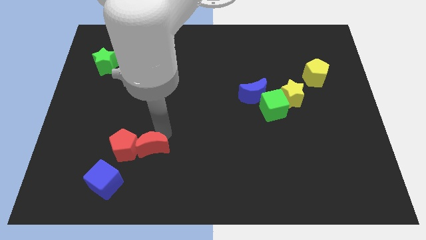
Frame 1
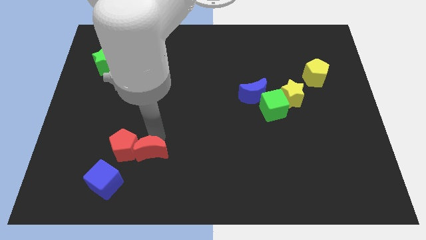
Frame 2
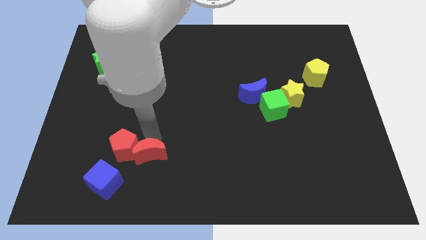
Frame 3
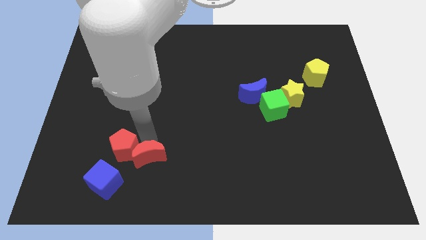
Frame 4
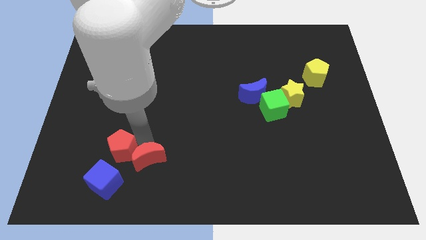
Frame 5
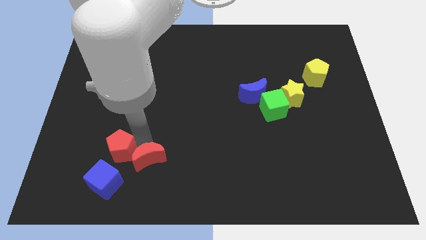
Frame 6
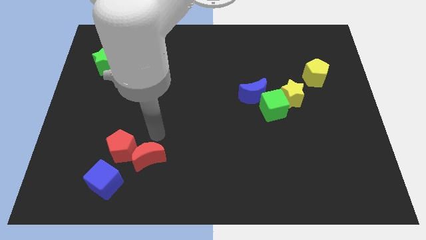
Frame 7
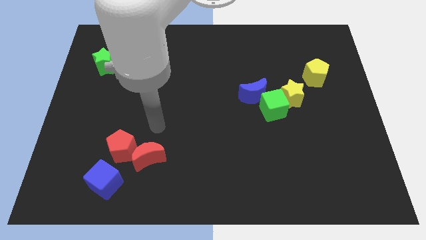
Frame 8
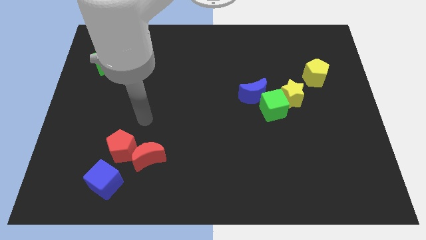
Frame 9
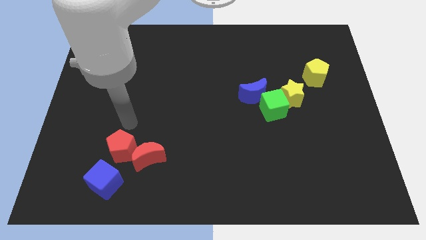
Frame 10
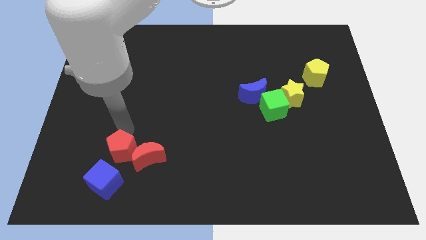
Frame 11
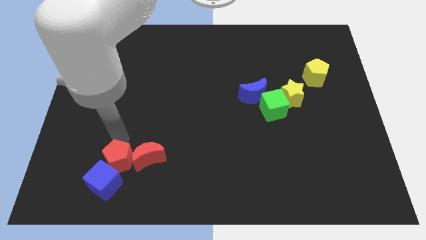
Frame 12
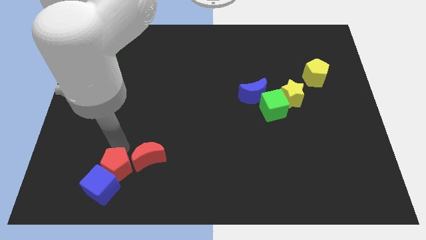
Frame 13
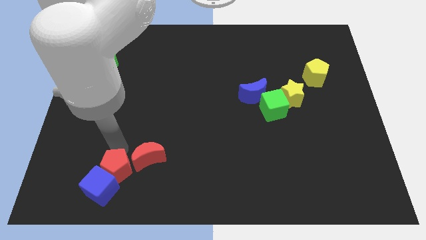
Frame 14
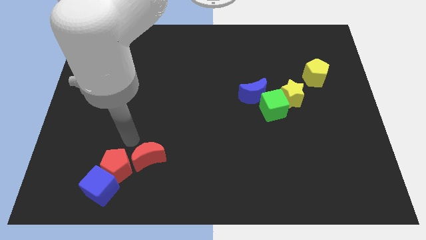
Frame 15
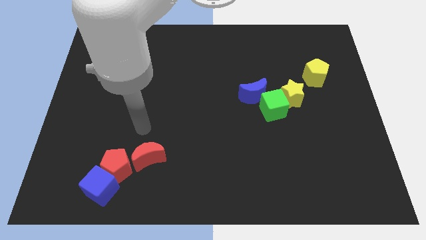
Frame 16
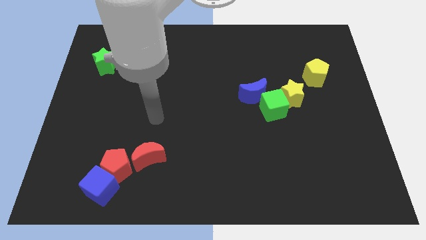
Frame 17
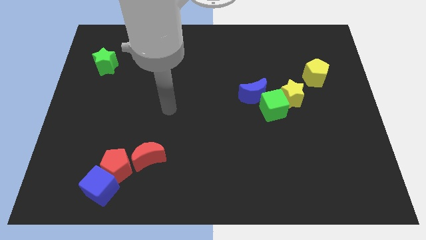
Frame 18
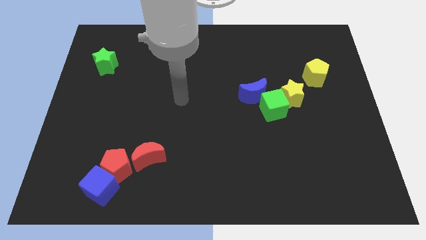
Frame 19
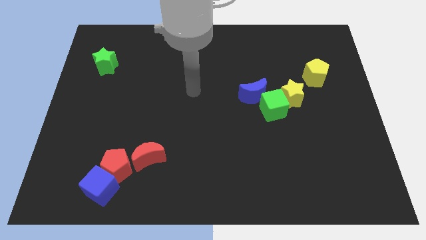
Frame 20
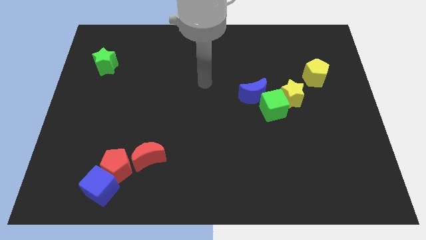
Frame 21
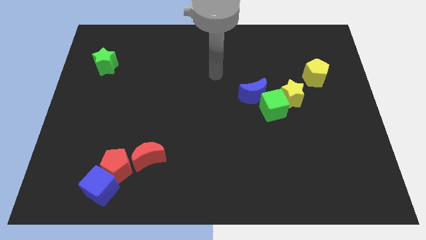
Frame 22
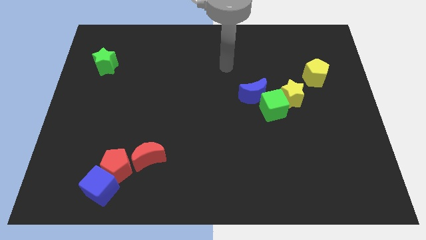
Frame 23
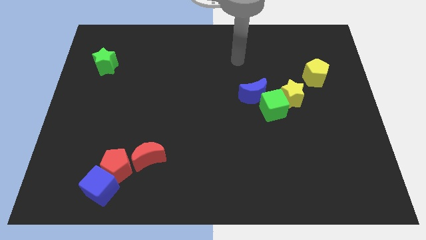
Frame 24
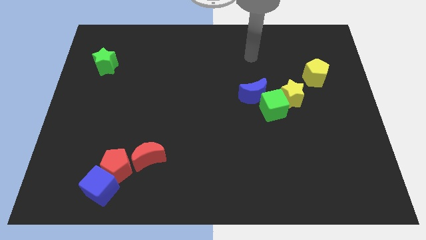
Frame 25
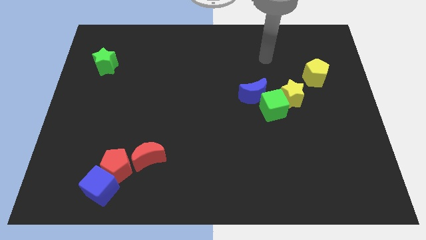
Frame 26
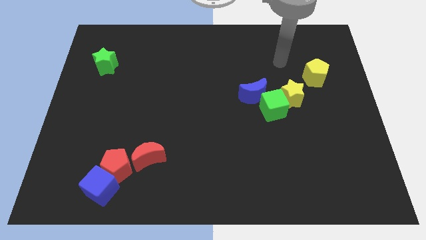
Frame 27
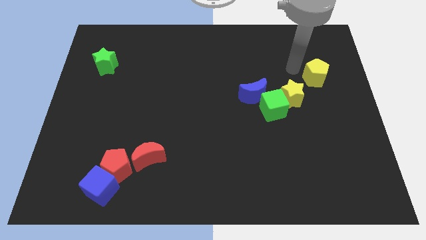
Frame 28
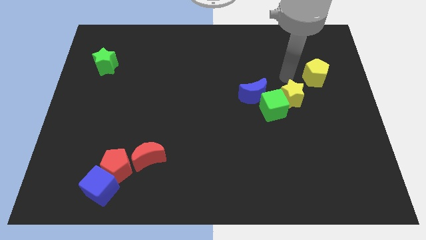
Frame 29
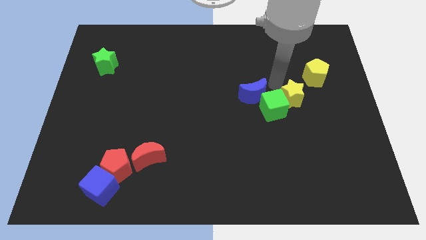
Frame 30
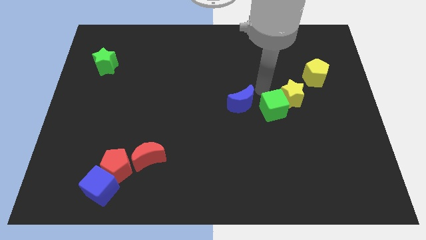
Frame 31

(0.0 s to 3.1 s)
slightly move the blue moon

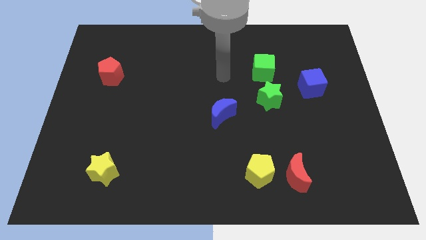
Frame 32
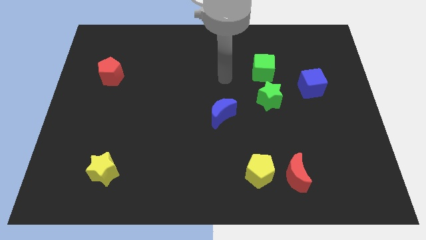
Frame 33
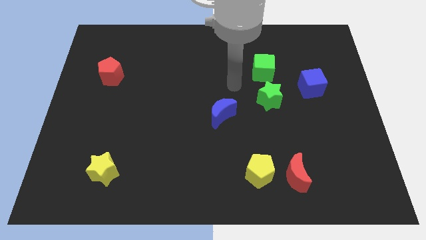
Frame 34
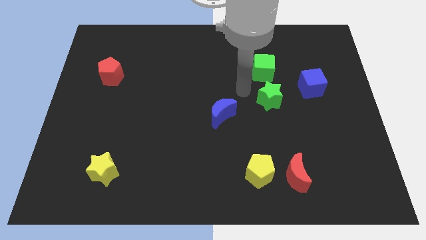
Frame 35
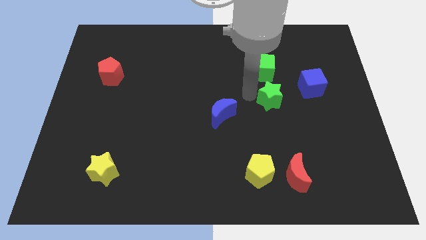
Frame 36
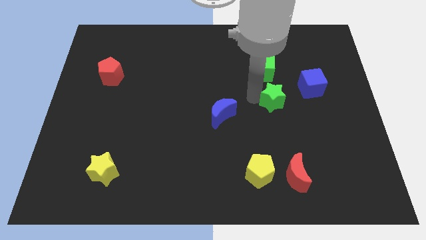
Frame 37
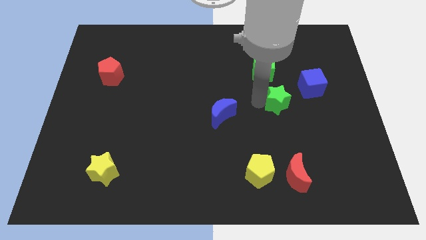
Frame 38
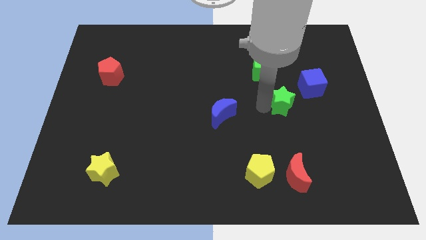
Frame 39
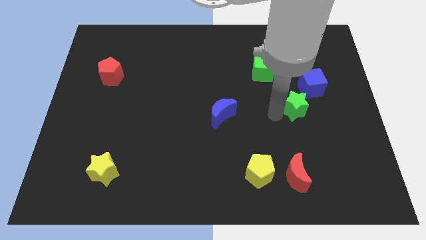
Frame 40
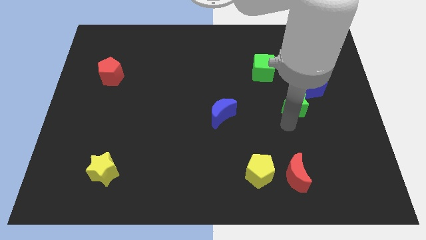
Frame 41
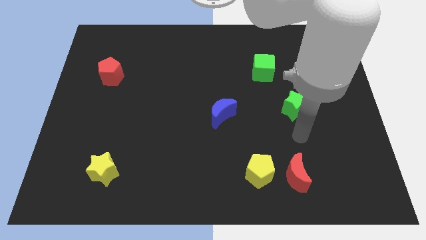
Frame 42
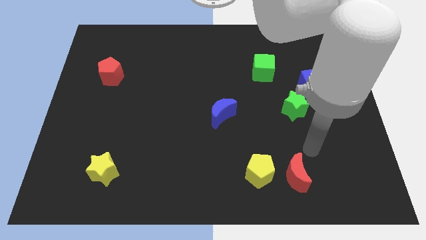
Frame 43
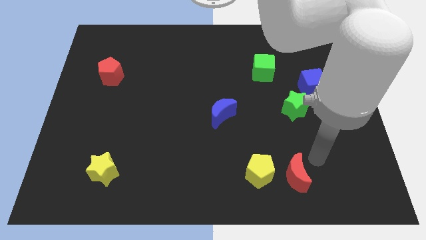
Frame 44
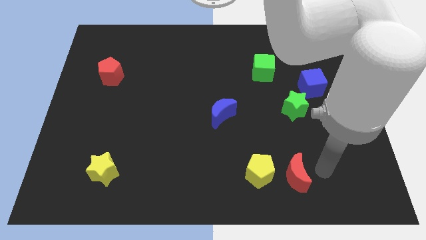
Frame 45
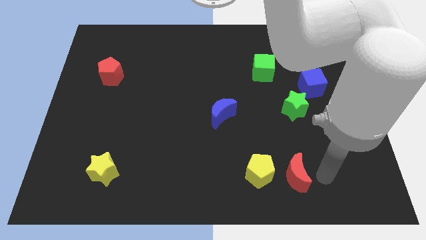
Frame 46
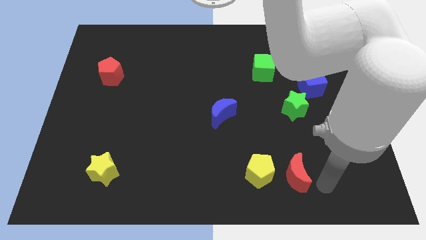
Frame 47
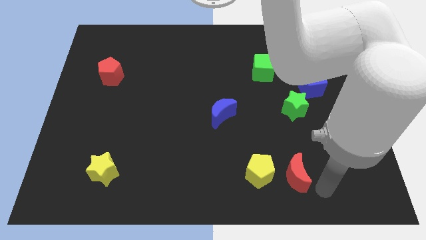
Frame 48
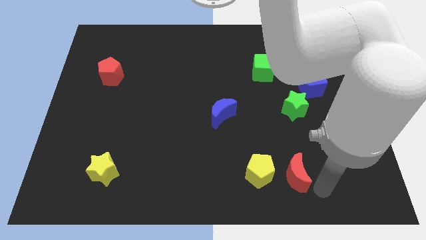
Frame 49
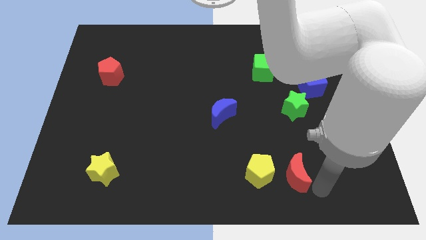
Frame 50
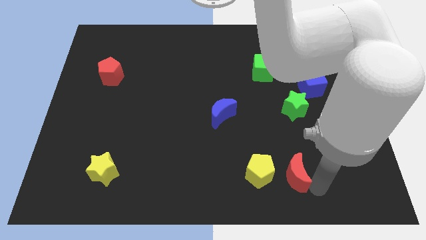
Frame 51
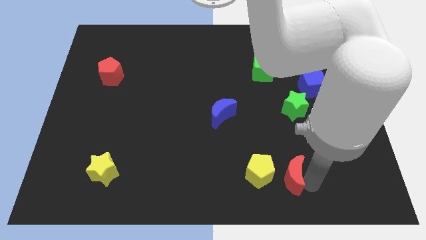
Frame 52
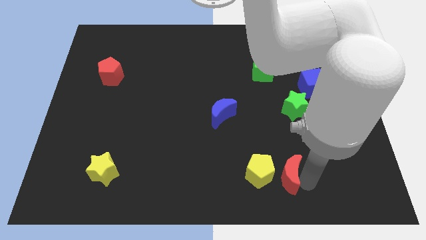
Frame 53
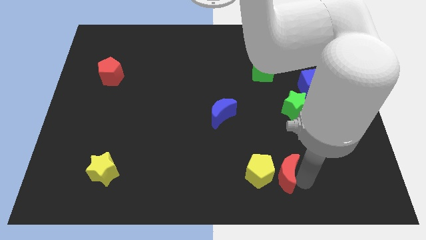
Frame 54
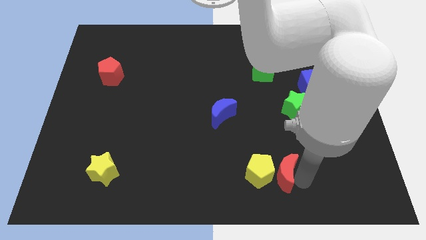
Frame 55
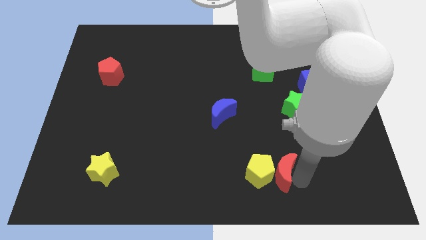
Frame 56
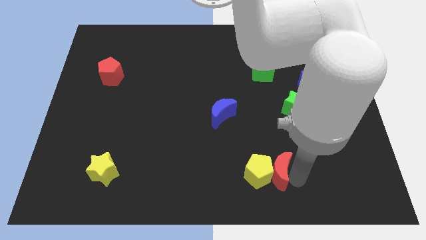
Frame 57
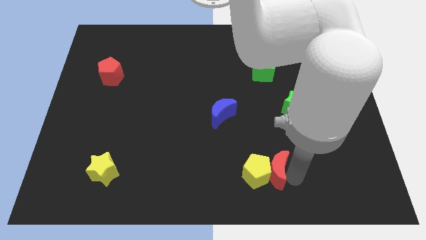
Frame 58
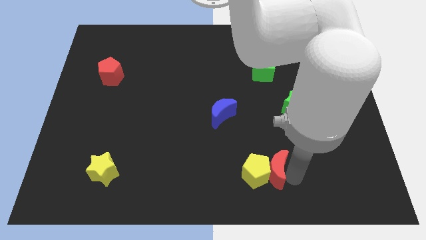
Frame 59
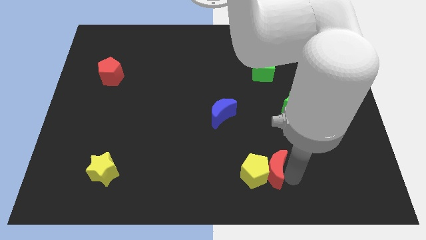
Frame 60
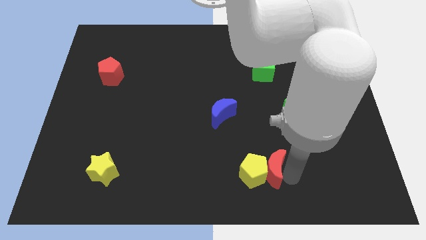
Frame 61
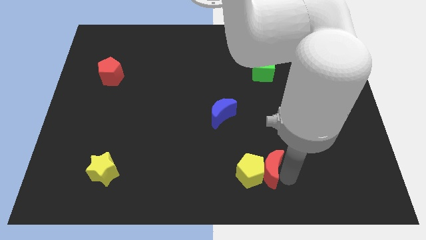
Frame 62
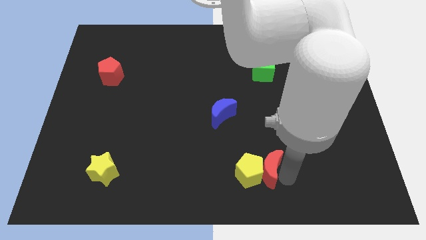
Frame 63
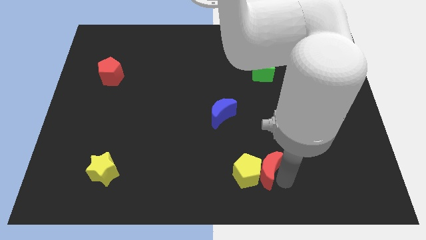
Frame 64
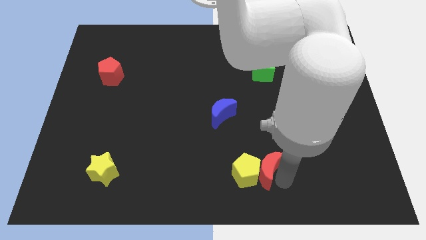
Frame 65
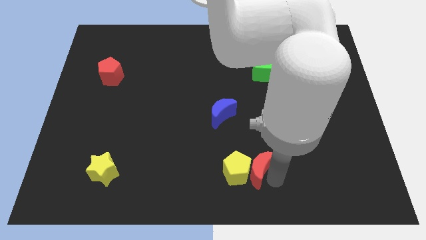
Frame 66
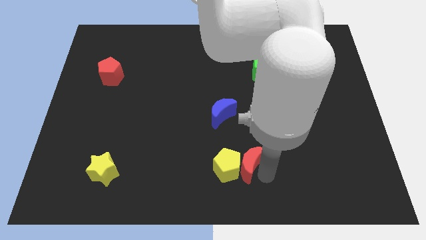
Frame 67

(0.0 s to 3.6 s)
move the red crescent to the right of the yellow pentagon

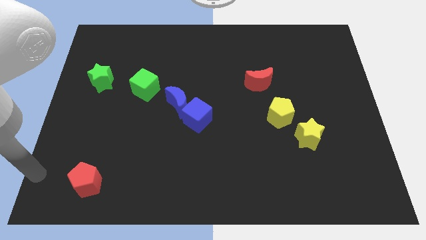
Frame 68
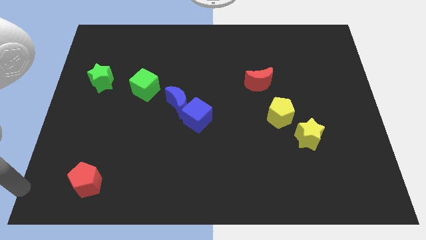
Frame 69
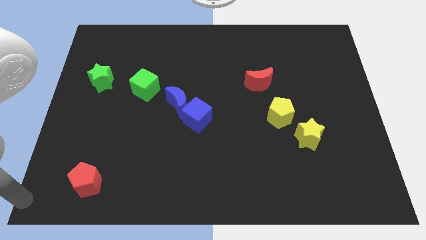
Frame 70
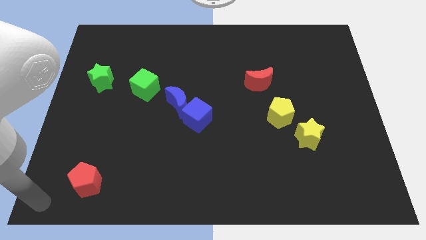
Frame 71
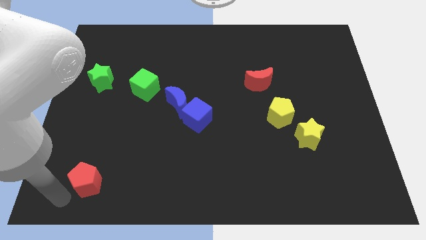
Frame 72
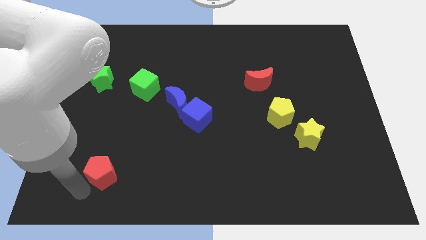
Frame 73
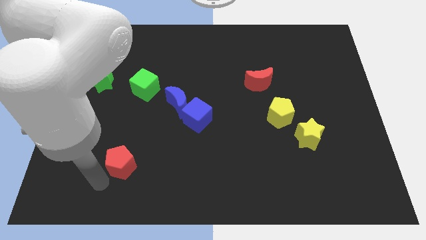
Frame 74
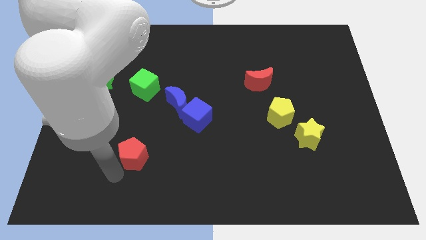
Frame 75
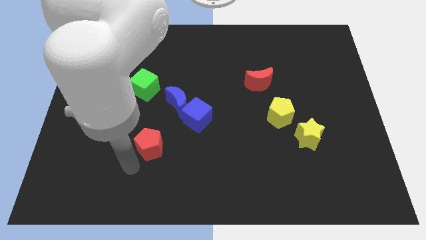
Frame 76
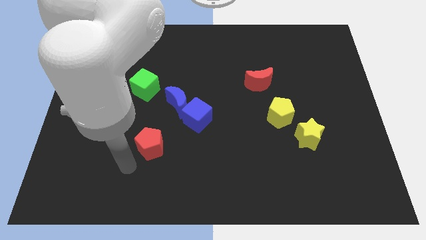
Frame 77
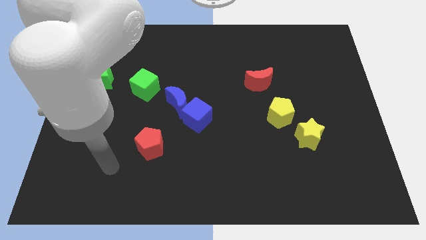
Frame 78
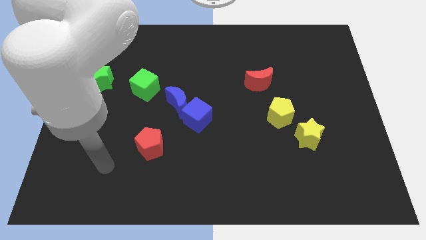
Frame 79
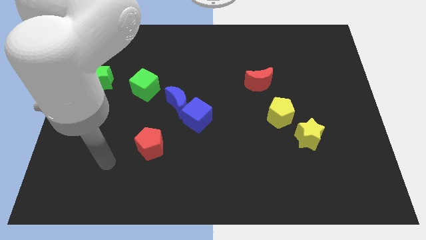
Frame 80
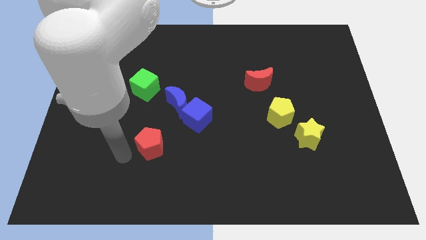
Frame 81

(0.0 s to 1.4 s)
place the red pentagon below the green cube

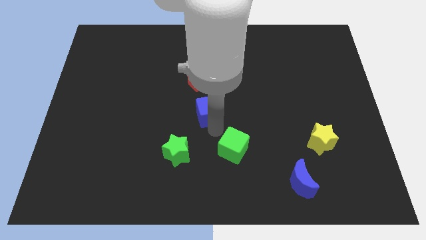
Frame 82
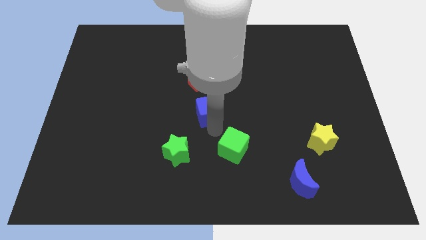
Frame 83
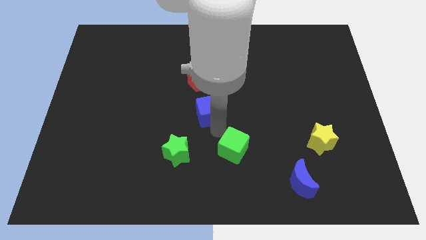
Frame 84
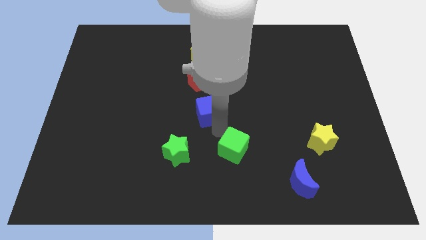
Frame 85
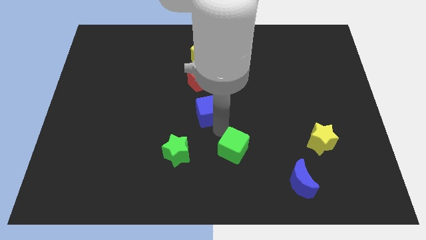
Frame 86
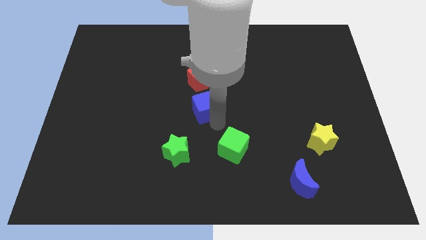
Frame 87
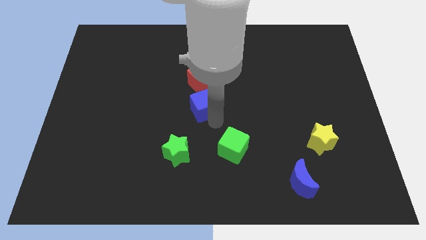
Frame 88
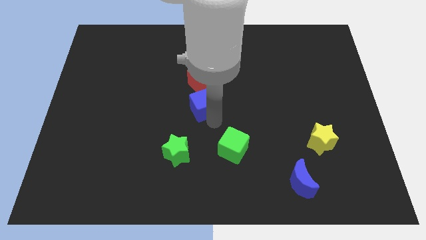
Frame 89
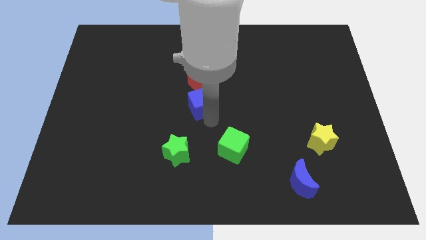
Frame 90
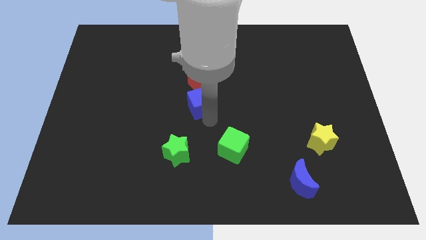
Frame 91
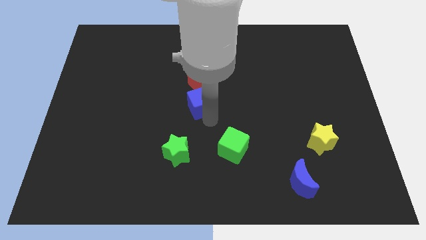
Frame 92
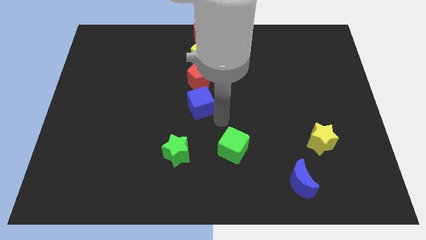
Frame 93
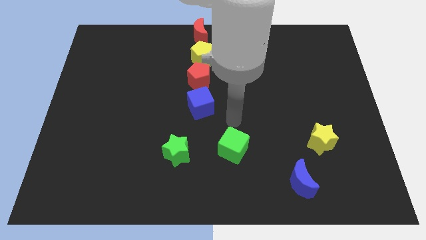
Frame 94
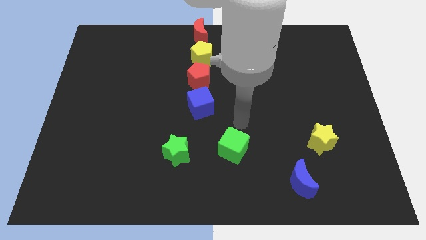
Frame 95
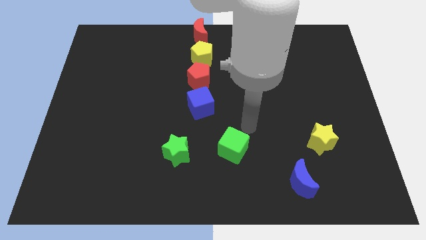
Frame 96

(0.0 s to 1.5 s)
move blue cube below the red pentagon
